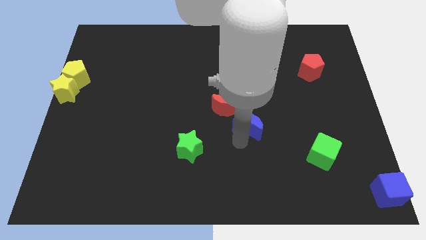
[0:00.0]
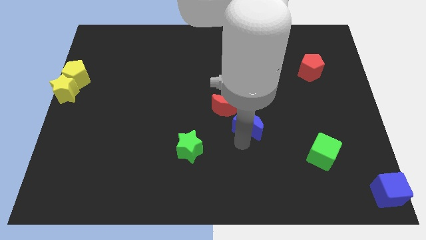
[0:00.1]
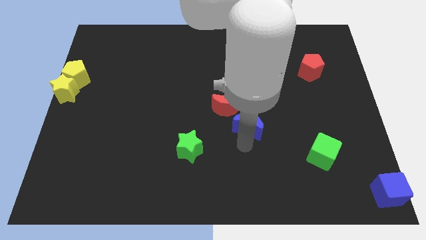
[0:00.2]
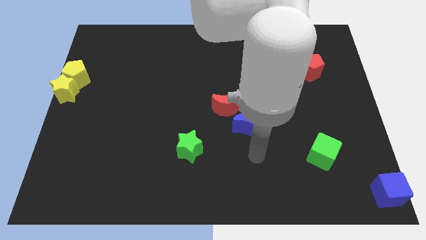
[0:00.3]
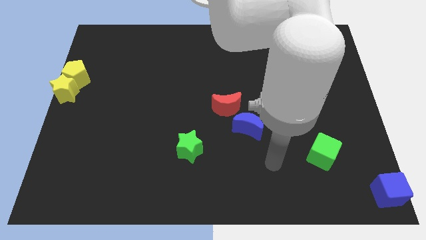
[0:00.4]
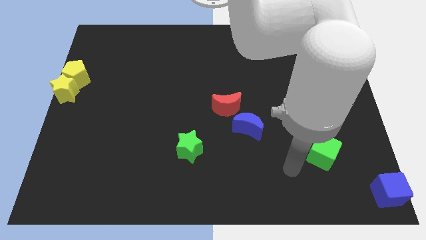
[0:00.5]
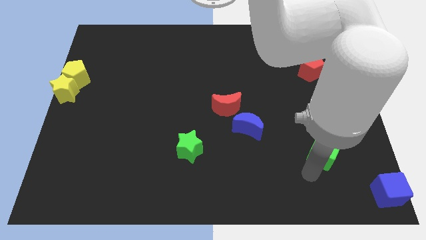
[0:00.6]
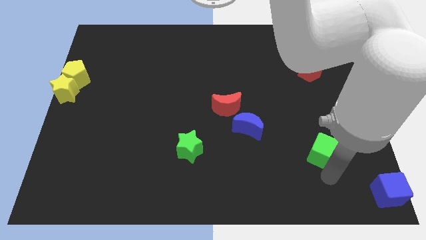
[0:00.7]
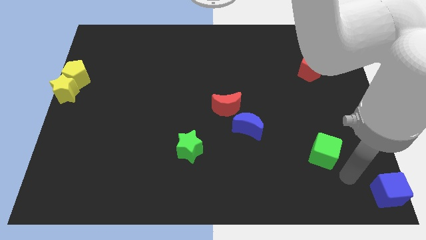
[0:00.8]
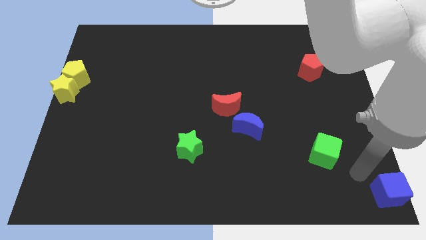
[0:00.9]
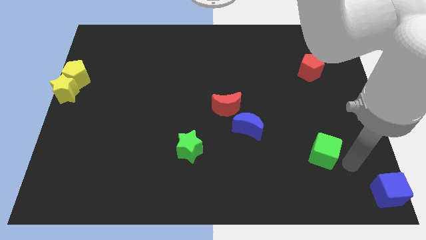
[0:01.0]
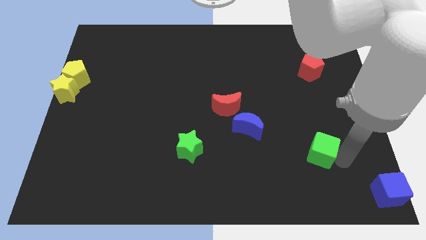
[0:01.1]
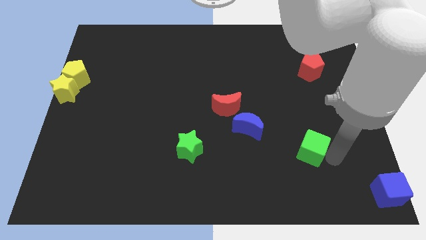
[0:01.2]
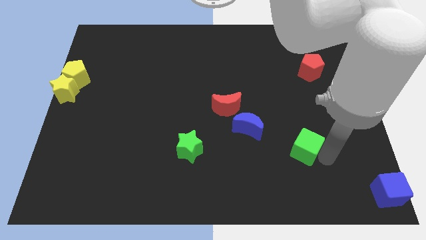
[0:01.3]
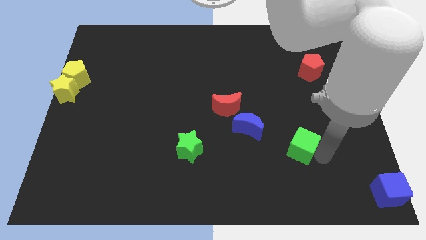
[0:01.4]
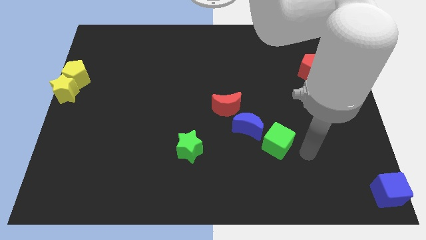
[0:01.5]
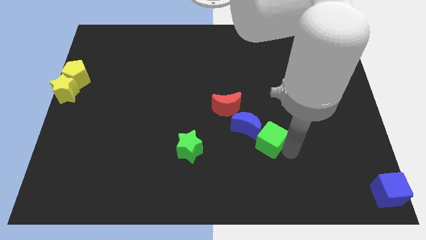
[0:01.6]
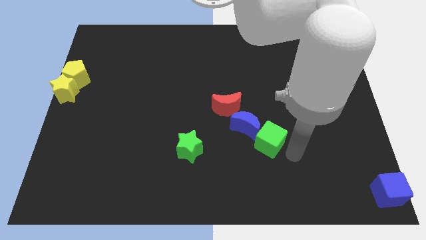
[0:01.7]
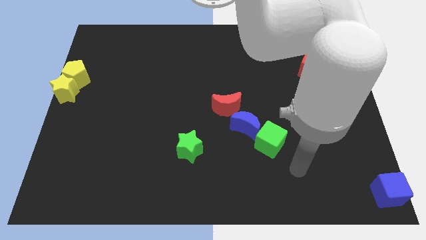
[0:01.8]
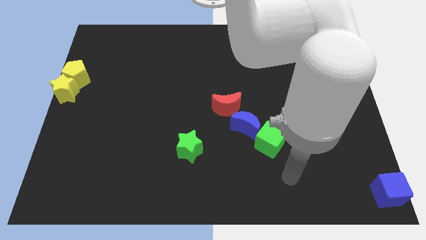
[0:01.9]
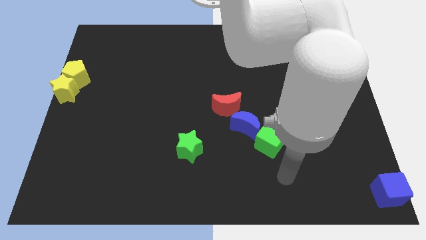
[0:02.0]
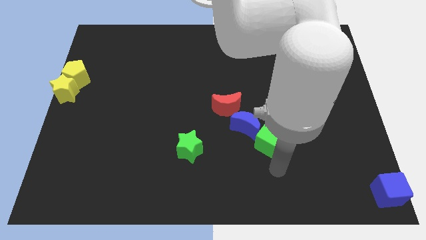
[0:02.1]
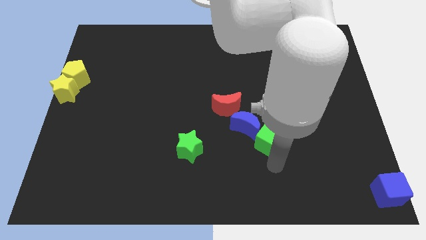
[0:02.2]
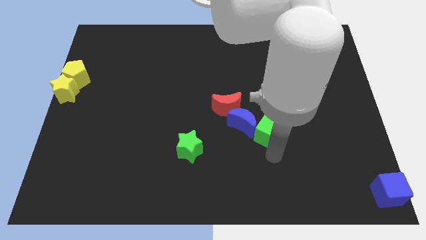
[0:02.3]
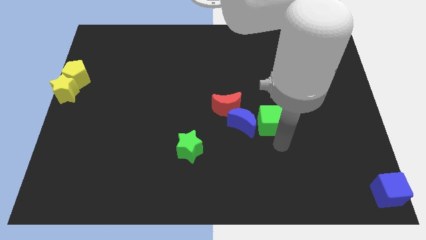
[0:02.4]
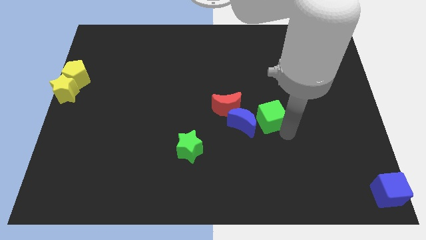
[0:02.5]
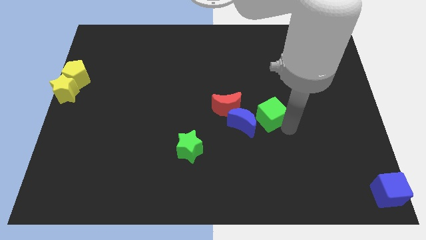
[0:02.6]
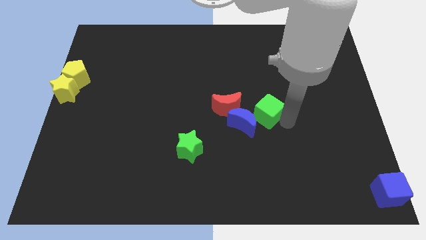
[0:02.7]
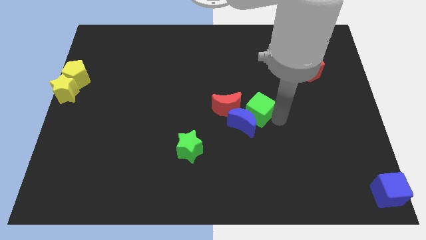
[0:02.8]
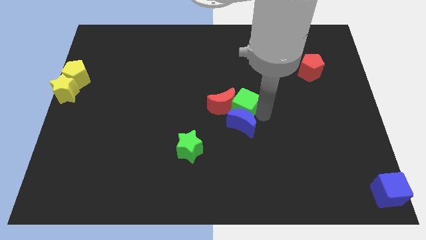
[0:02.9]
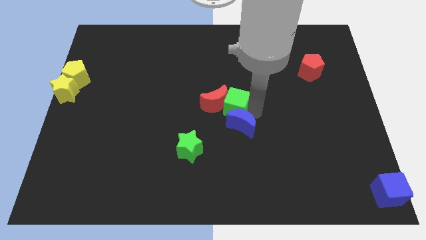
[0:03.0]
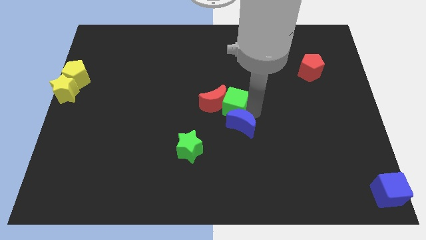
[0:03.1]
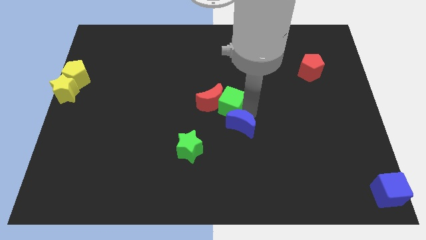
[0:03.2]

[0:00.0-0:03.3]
push the green cube into red crescent

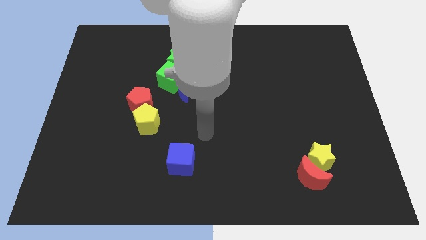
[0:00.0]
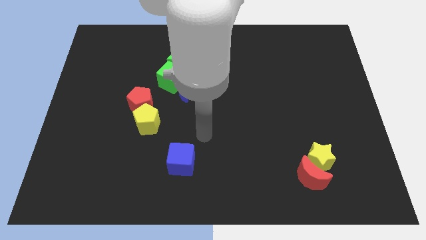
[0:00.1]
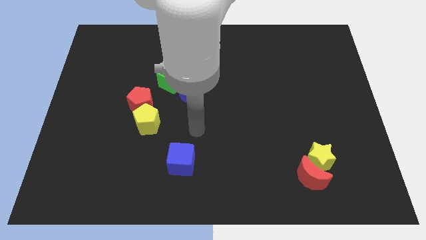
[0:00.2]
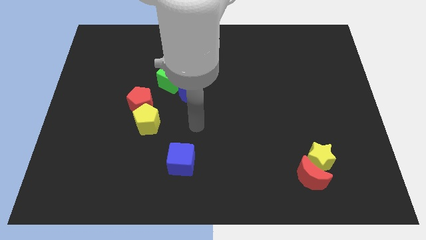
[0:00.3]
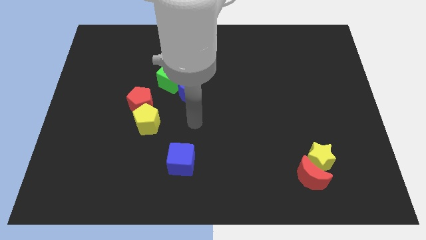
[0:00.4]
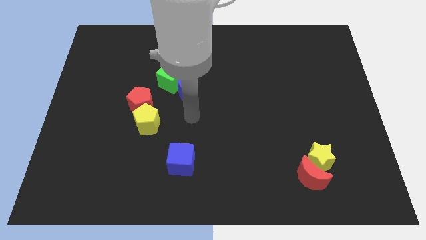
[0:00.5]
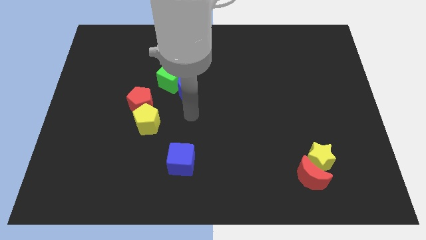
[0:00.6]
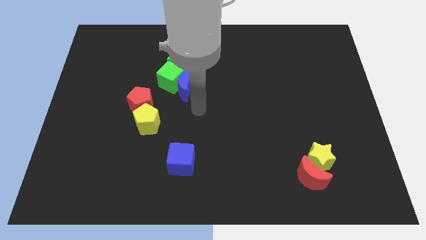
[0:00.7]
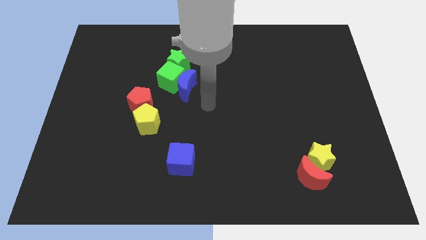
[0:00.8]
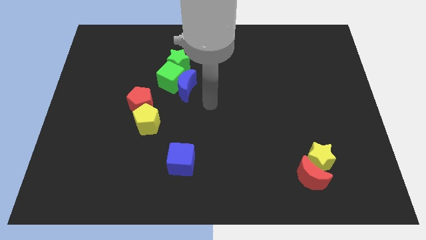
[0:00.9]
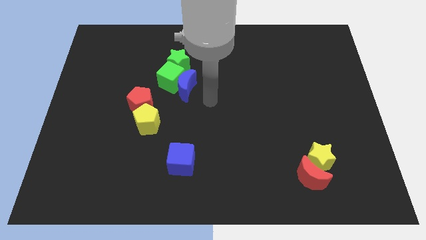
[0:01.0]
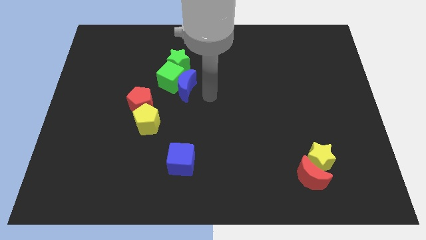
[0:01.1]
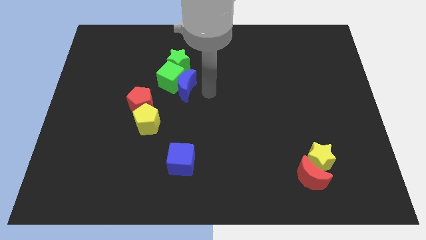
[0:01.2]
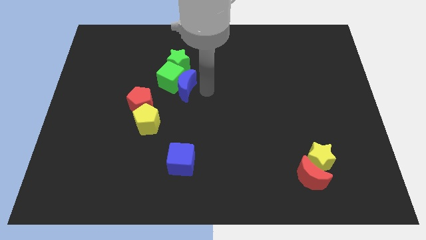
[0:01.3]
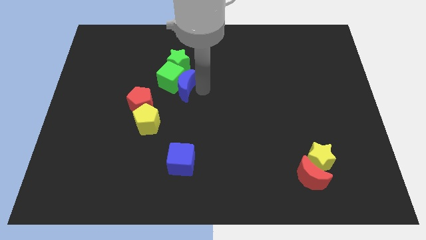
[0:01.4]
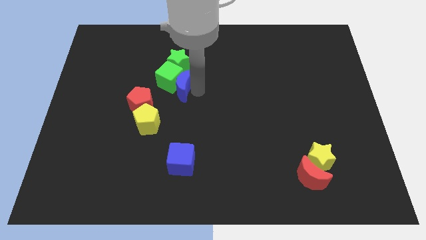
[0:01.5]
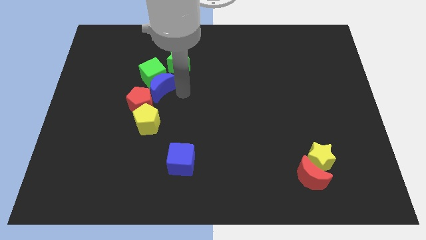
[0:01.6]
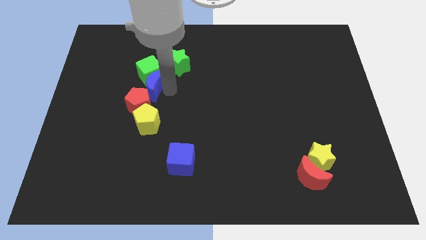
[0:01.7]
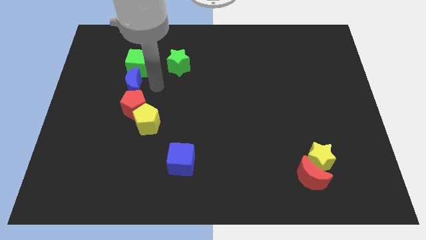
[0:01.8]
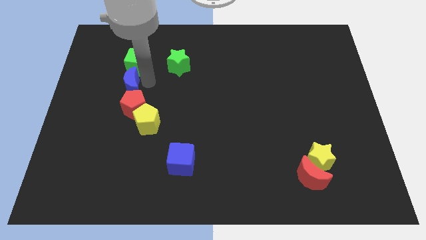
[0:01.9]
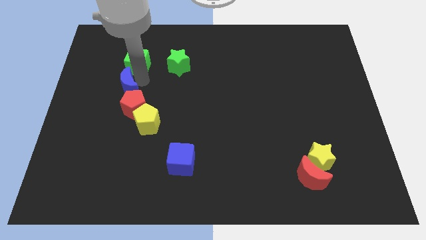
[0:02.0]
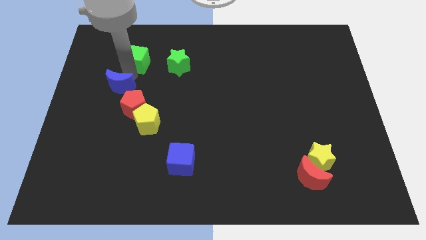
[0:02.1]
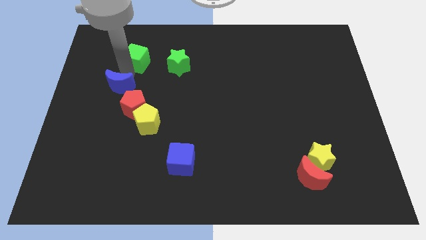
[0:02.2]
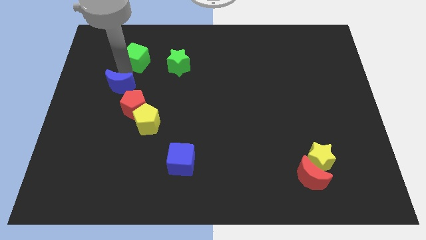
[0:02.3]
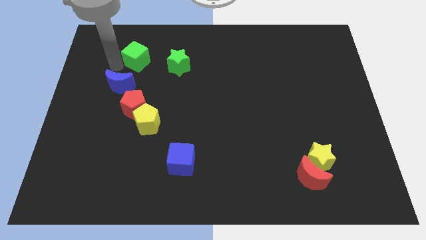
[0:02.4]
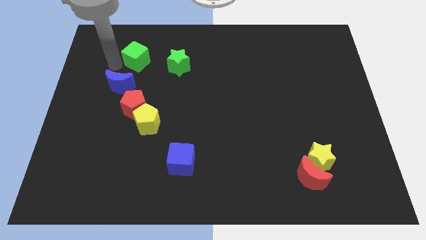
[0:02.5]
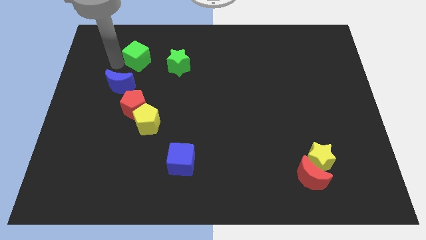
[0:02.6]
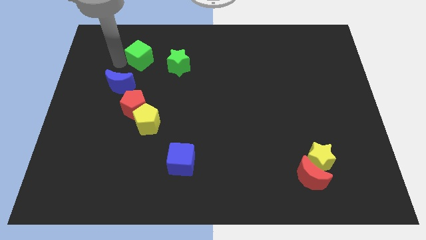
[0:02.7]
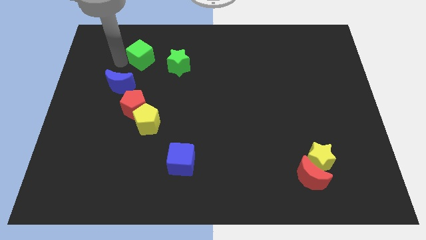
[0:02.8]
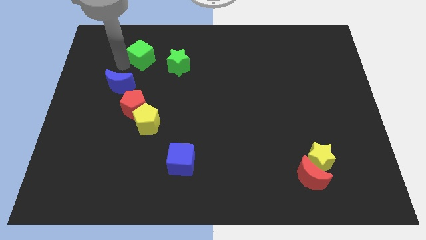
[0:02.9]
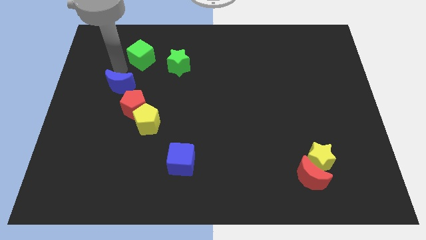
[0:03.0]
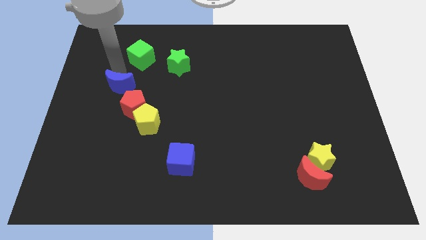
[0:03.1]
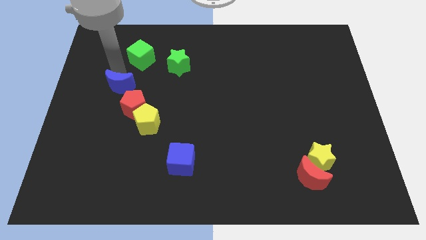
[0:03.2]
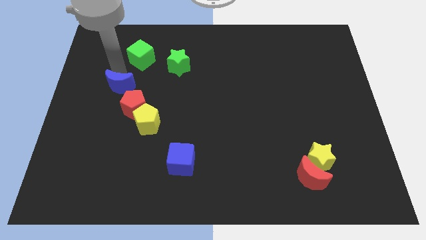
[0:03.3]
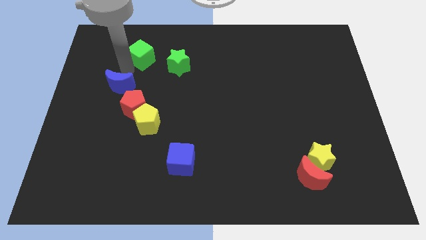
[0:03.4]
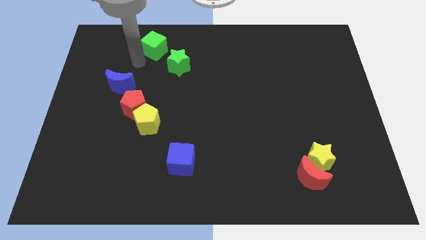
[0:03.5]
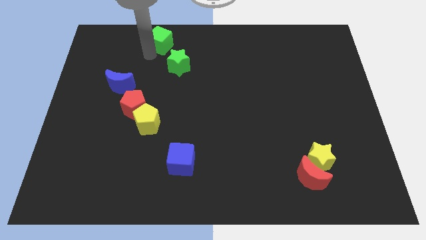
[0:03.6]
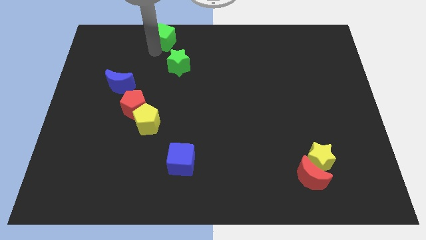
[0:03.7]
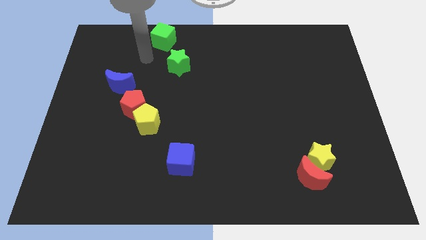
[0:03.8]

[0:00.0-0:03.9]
bring the green cube at the top side of the green star

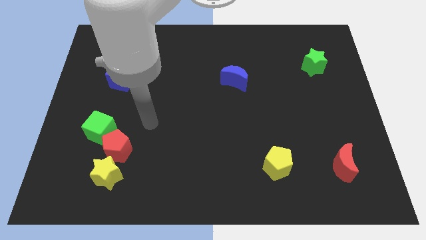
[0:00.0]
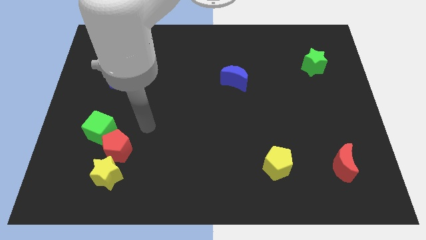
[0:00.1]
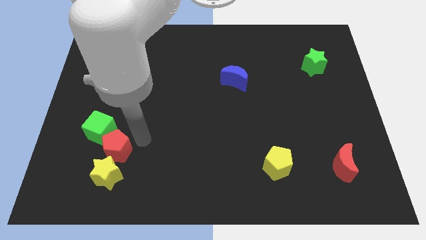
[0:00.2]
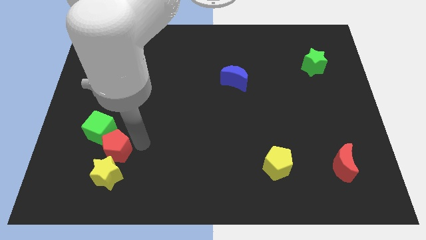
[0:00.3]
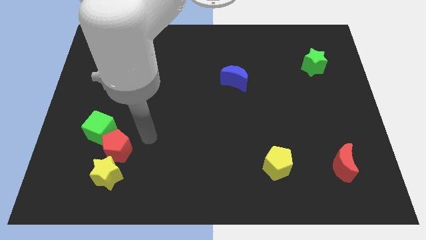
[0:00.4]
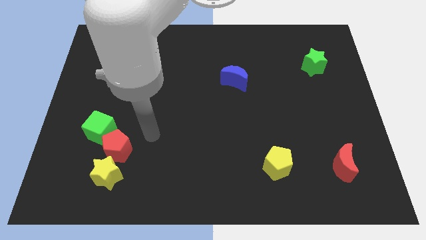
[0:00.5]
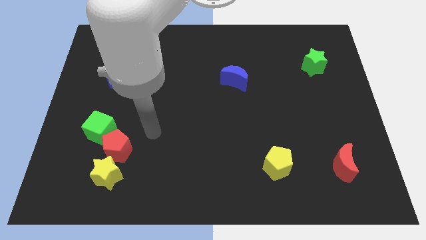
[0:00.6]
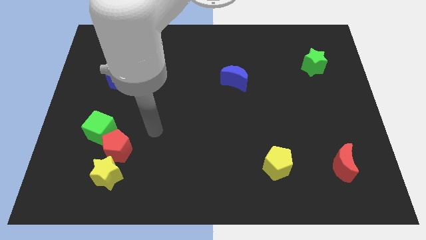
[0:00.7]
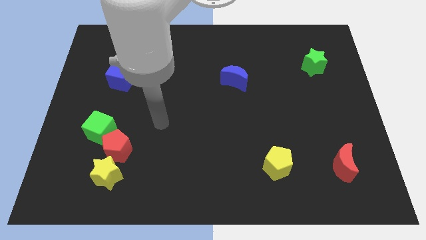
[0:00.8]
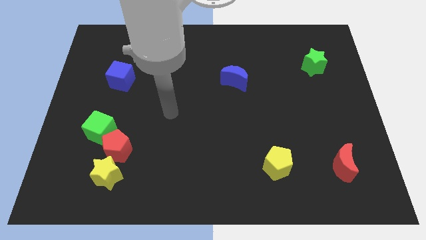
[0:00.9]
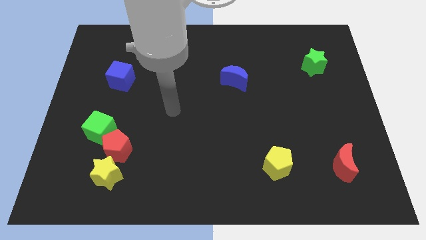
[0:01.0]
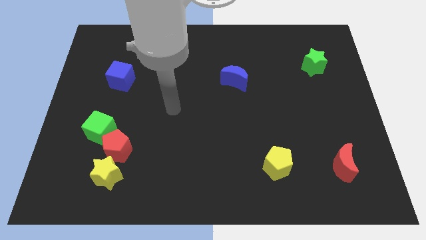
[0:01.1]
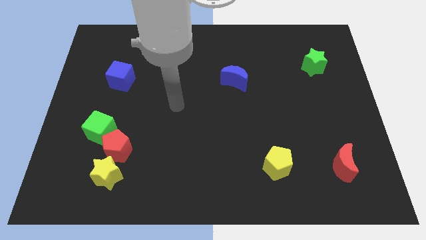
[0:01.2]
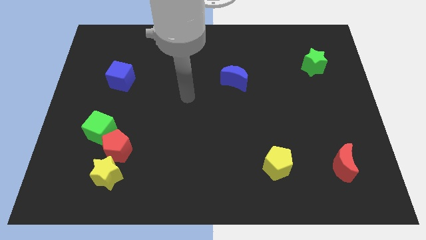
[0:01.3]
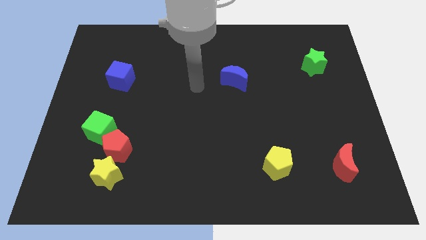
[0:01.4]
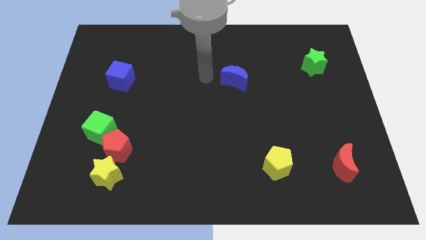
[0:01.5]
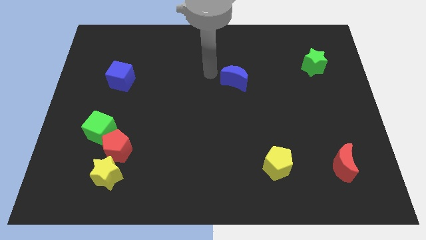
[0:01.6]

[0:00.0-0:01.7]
point your arm to the left side of blue moon

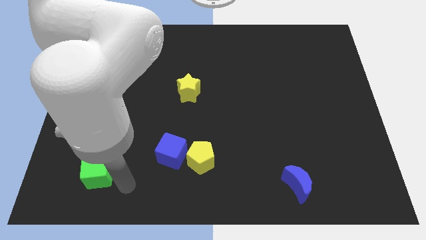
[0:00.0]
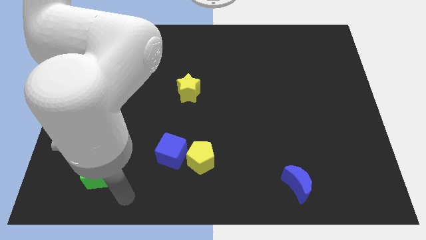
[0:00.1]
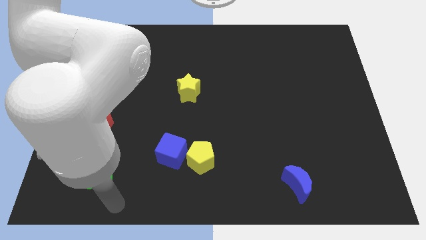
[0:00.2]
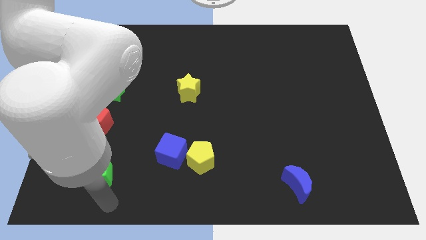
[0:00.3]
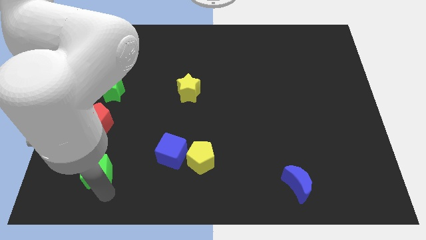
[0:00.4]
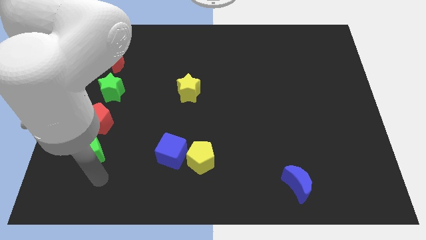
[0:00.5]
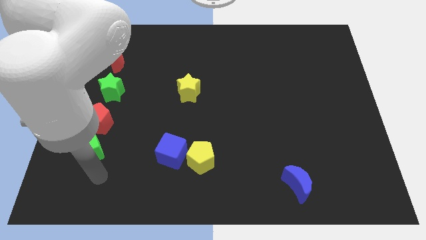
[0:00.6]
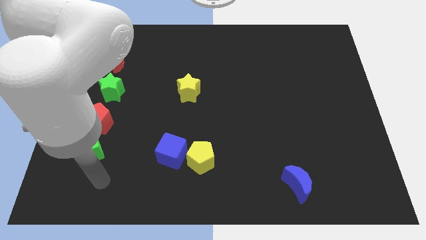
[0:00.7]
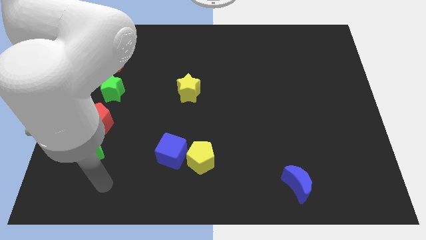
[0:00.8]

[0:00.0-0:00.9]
push the green cube towards the red pentagon
